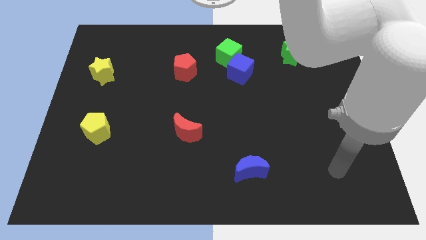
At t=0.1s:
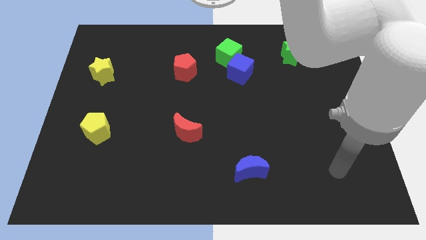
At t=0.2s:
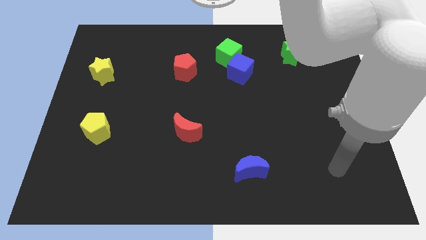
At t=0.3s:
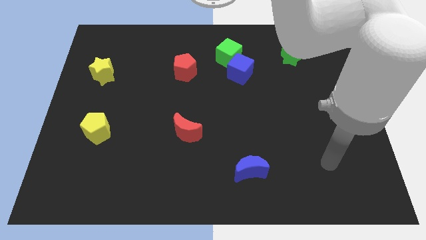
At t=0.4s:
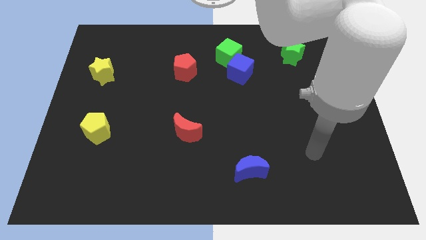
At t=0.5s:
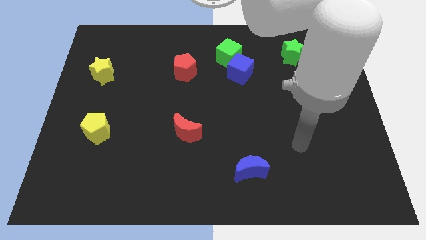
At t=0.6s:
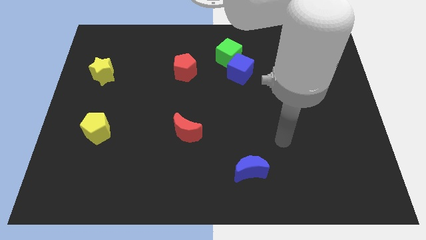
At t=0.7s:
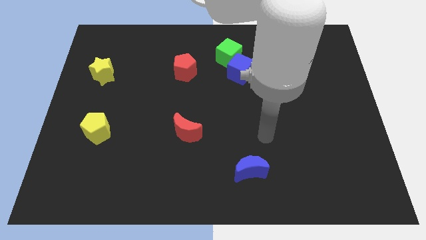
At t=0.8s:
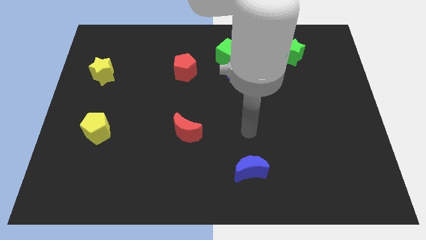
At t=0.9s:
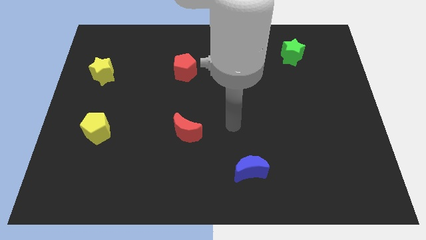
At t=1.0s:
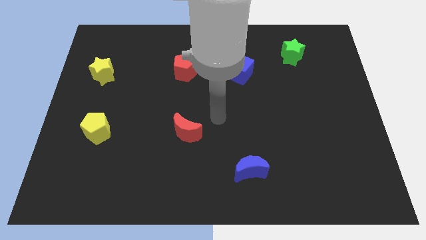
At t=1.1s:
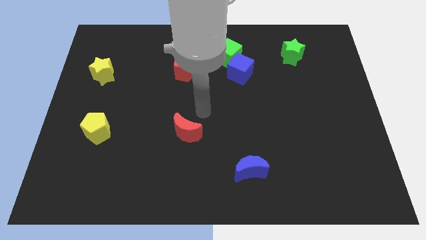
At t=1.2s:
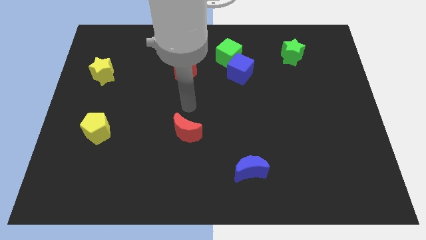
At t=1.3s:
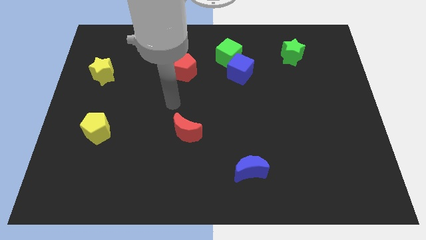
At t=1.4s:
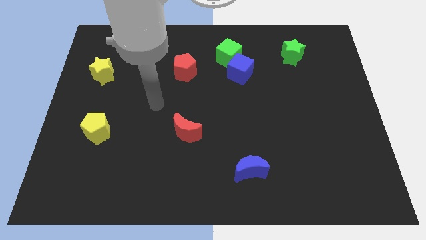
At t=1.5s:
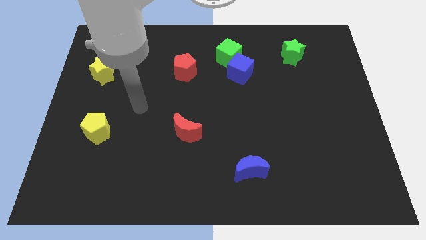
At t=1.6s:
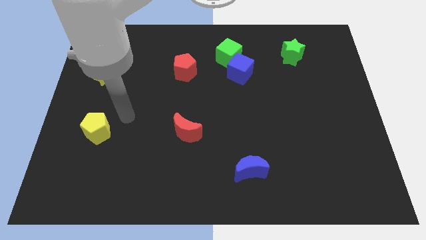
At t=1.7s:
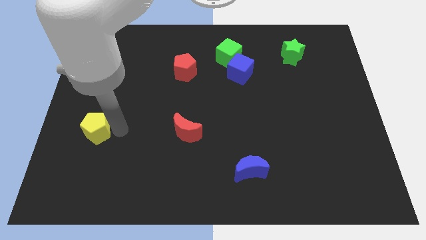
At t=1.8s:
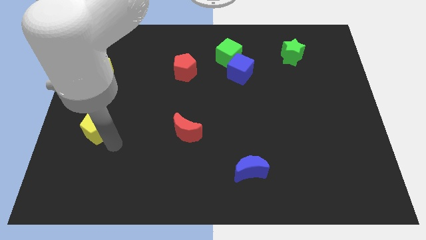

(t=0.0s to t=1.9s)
move the arm towards the right of yellow pentagon

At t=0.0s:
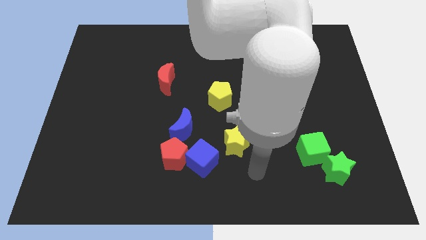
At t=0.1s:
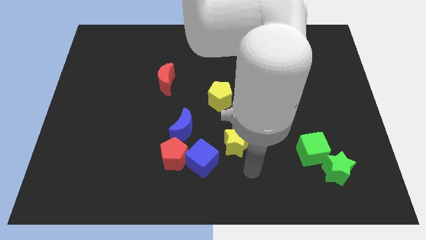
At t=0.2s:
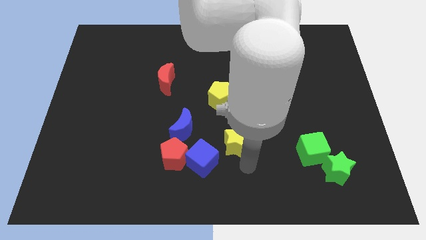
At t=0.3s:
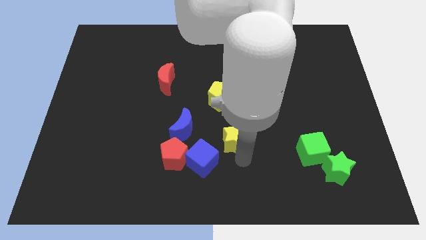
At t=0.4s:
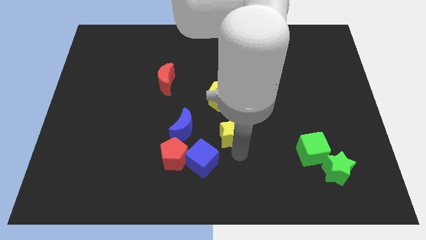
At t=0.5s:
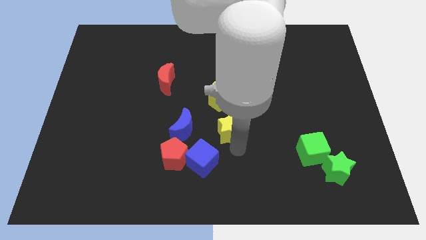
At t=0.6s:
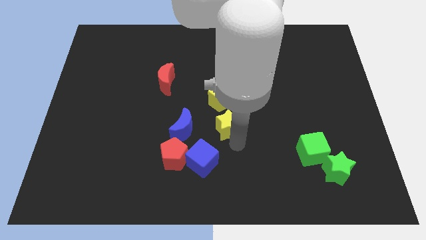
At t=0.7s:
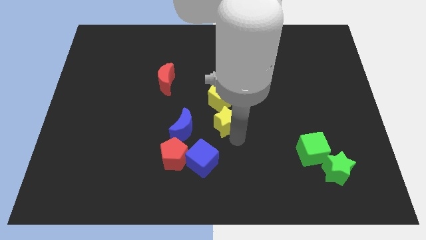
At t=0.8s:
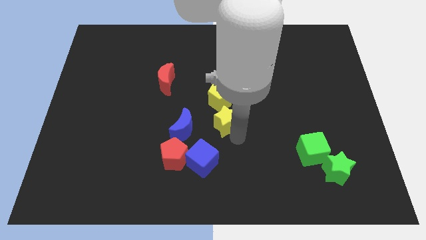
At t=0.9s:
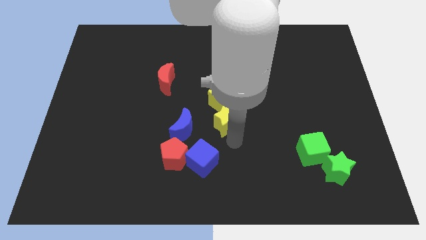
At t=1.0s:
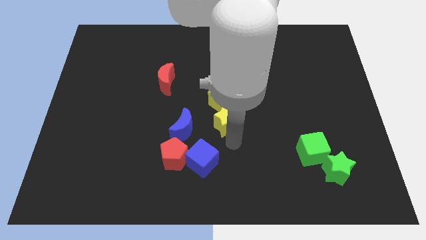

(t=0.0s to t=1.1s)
push the yellow star to the bottom of the yellow pentagon

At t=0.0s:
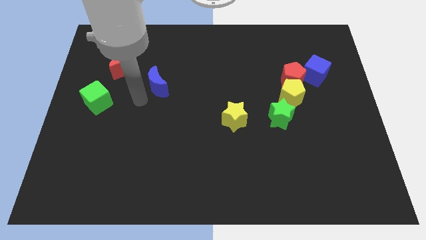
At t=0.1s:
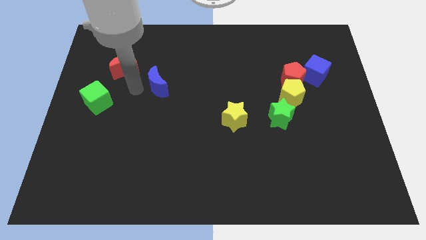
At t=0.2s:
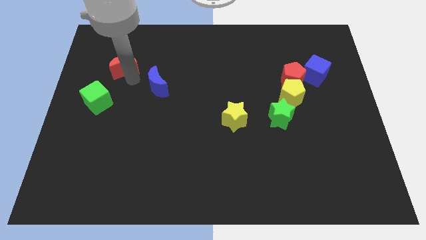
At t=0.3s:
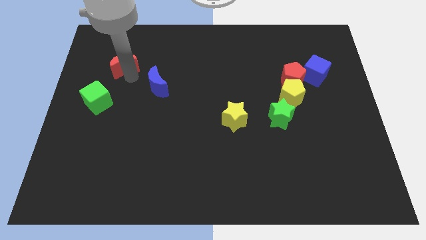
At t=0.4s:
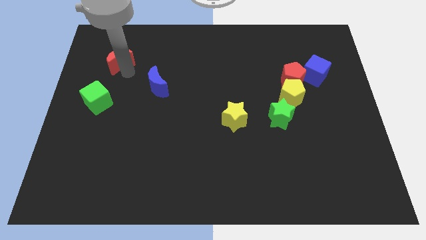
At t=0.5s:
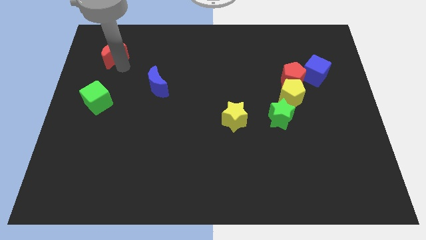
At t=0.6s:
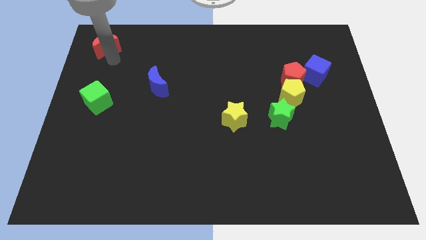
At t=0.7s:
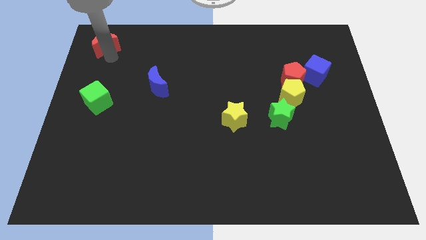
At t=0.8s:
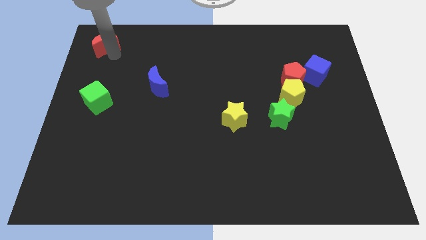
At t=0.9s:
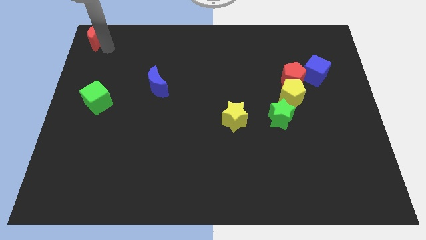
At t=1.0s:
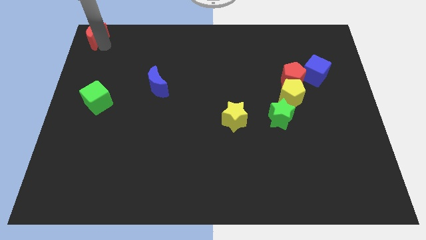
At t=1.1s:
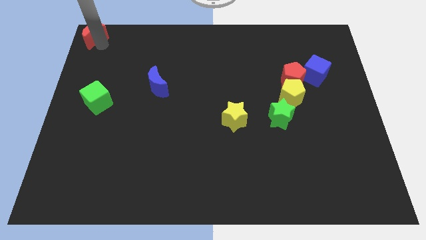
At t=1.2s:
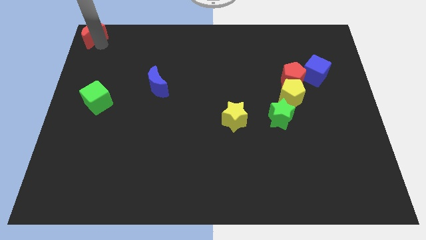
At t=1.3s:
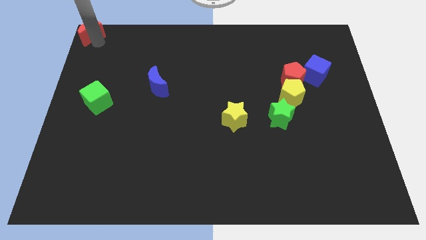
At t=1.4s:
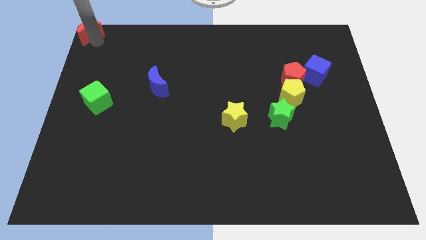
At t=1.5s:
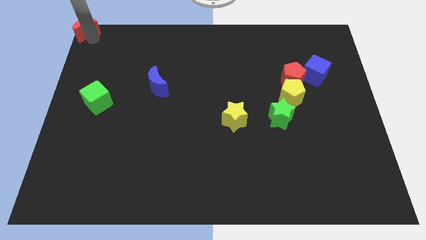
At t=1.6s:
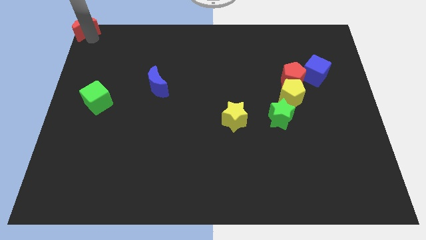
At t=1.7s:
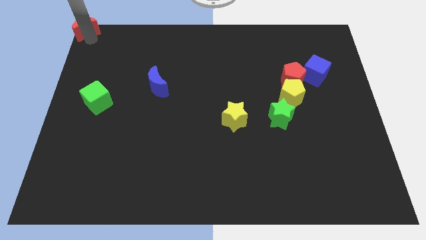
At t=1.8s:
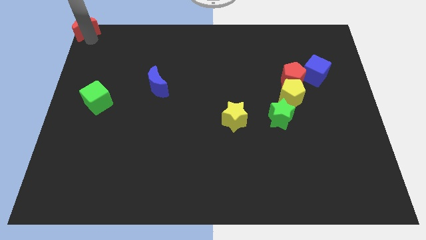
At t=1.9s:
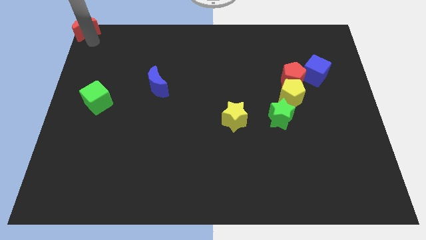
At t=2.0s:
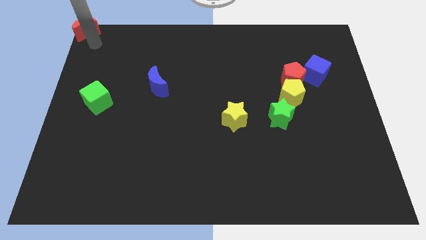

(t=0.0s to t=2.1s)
place the red crescent at top left corner

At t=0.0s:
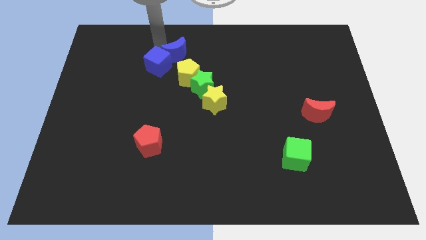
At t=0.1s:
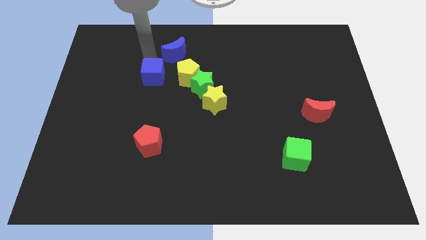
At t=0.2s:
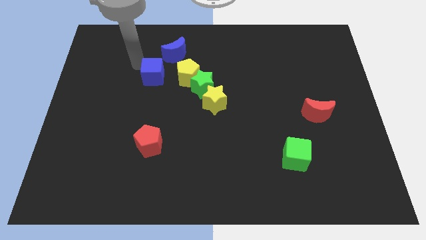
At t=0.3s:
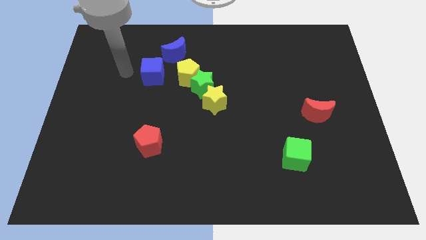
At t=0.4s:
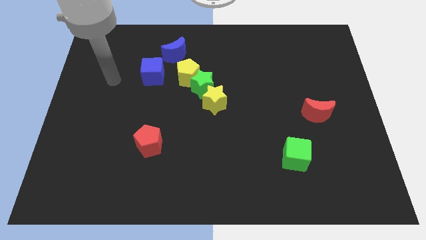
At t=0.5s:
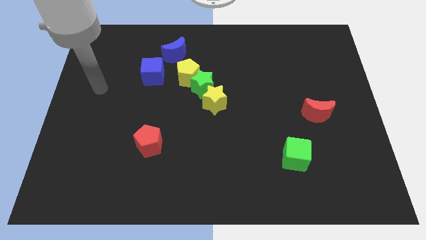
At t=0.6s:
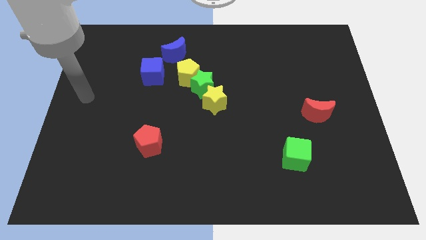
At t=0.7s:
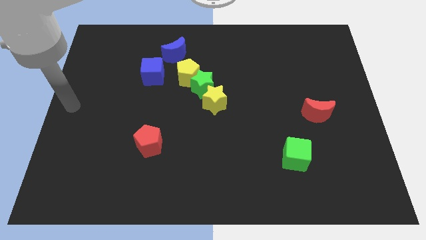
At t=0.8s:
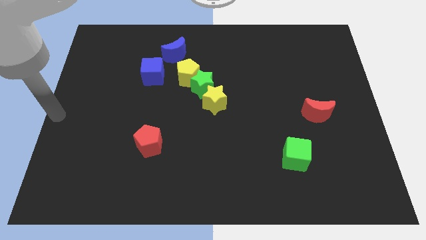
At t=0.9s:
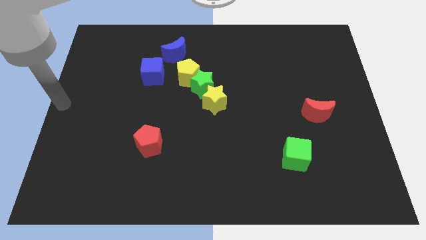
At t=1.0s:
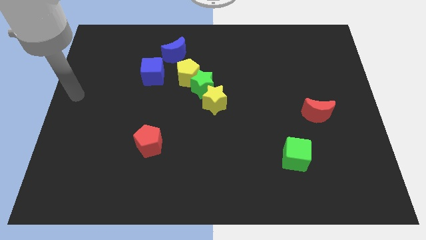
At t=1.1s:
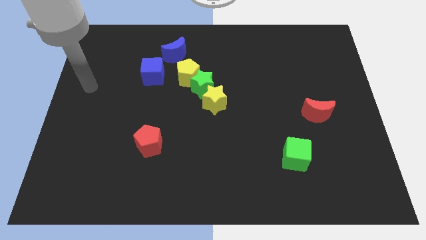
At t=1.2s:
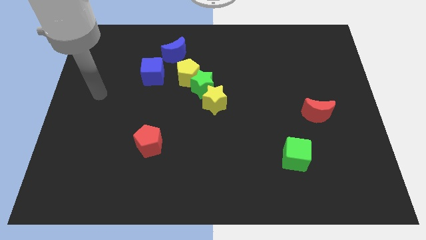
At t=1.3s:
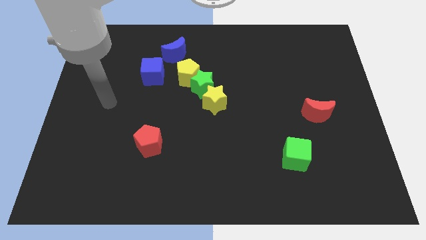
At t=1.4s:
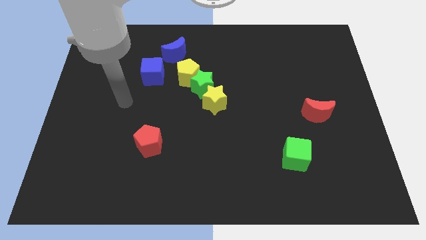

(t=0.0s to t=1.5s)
move blue cube slightly

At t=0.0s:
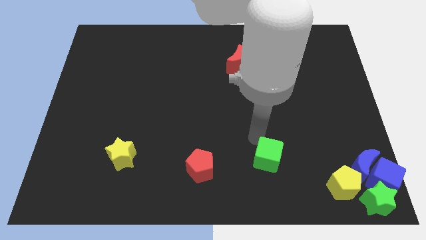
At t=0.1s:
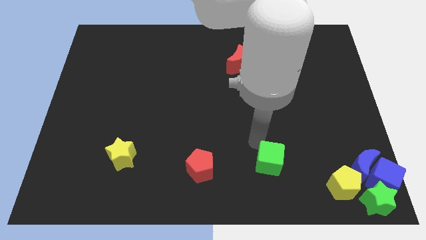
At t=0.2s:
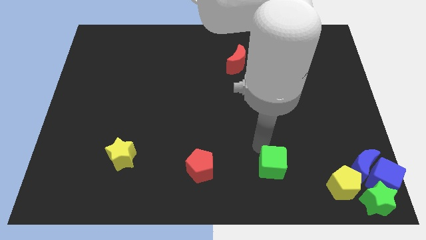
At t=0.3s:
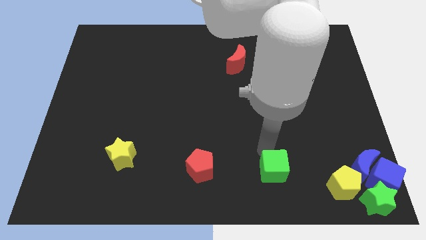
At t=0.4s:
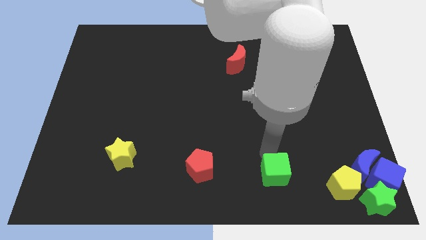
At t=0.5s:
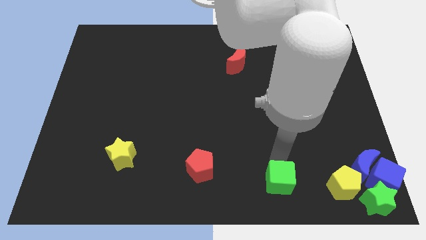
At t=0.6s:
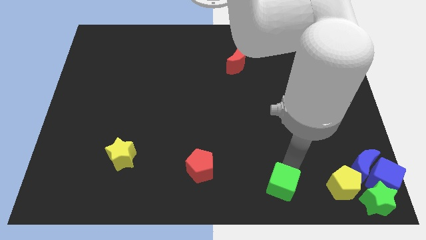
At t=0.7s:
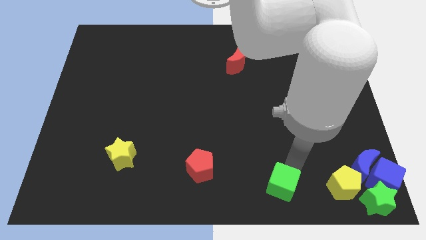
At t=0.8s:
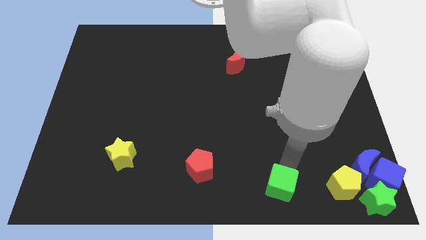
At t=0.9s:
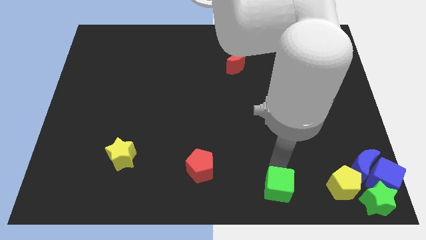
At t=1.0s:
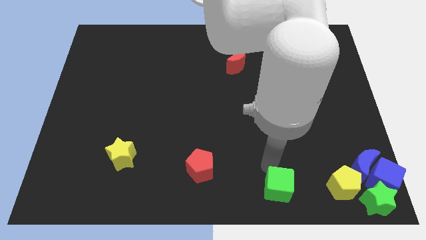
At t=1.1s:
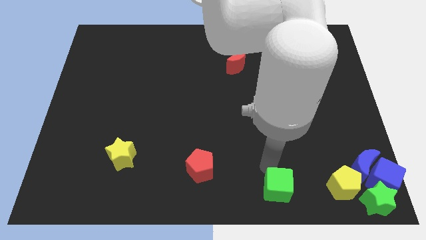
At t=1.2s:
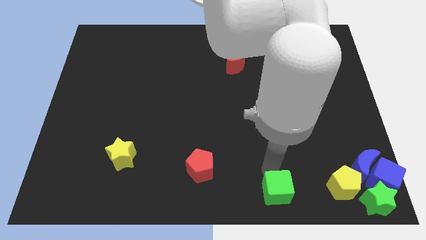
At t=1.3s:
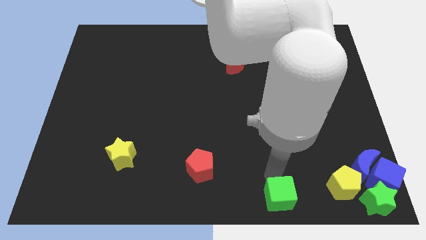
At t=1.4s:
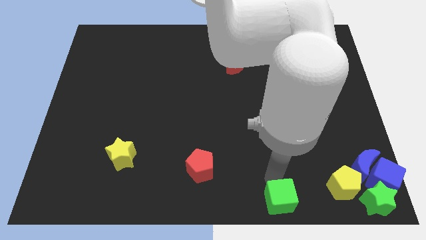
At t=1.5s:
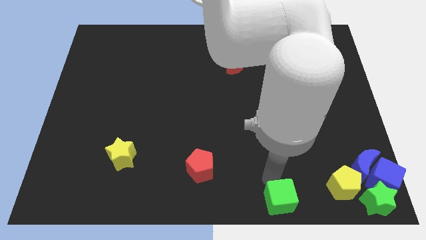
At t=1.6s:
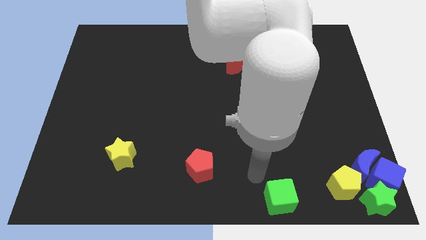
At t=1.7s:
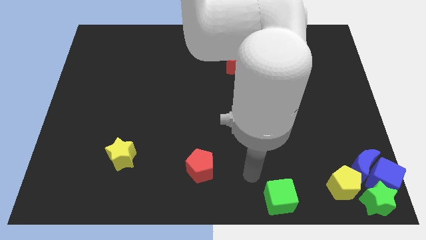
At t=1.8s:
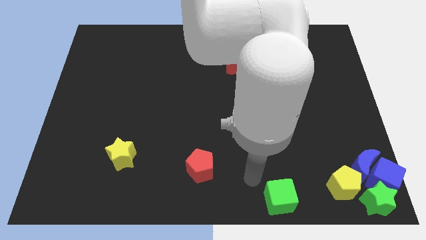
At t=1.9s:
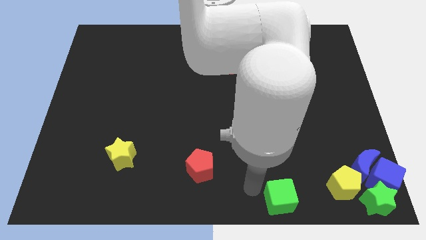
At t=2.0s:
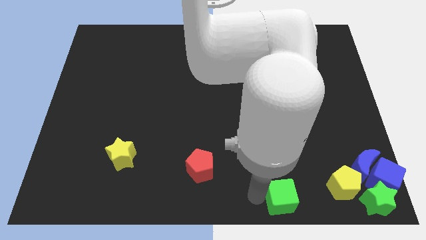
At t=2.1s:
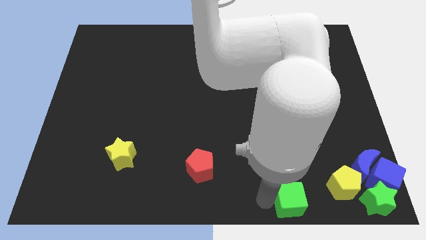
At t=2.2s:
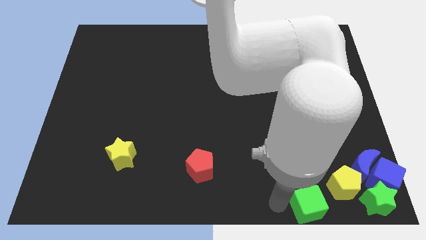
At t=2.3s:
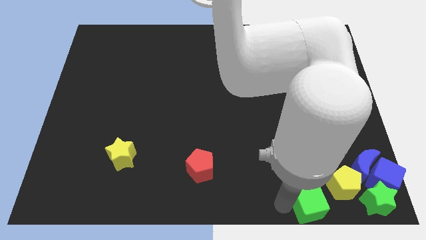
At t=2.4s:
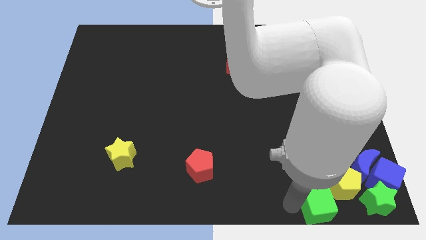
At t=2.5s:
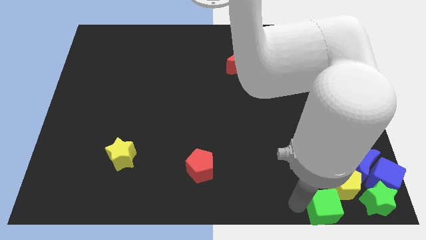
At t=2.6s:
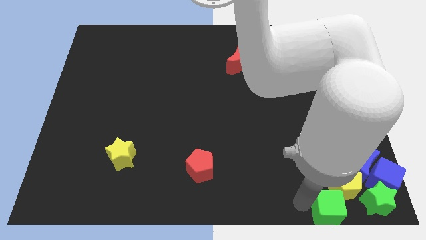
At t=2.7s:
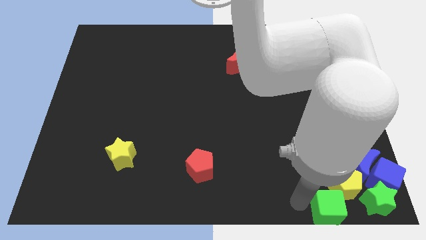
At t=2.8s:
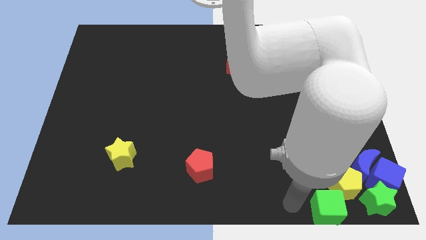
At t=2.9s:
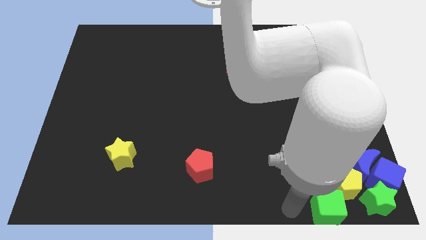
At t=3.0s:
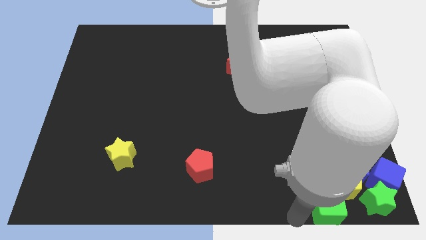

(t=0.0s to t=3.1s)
slide green cube to bottom left of yellow pentagon
